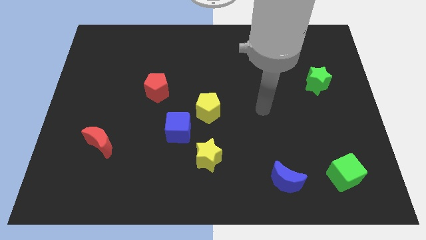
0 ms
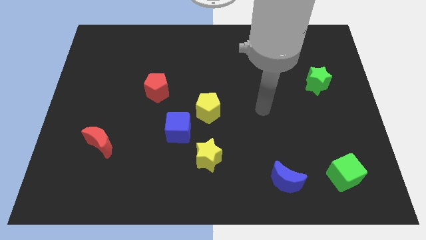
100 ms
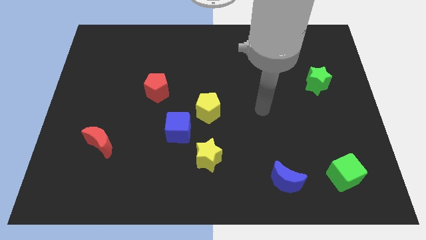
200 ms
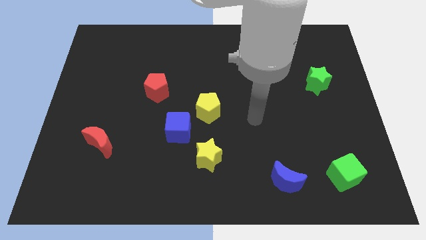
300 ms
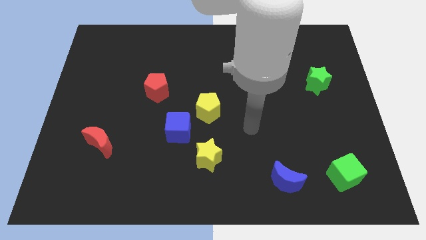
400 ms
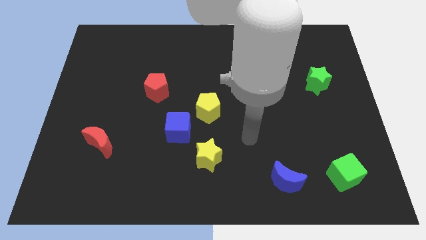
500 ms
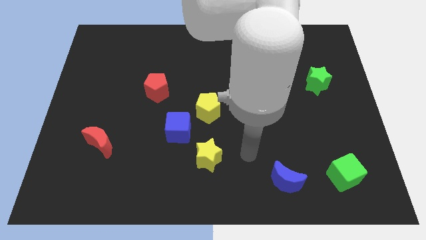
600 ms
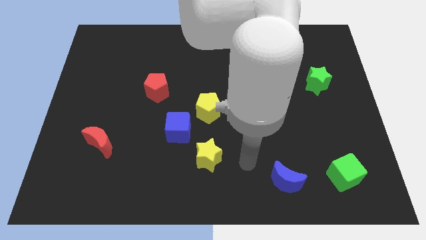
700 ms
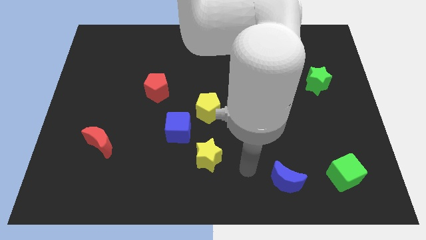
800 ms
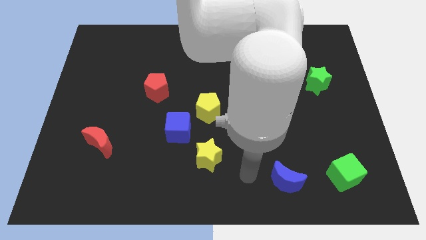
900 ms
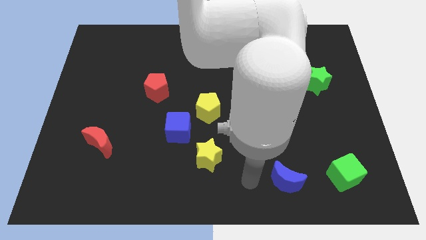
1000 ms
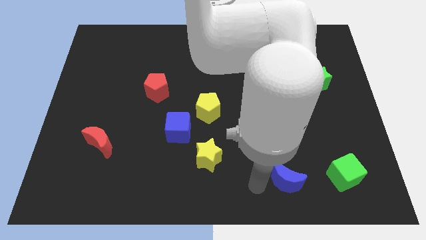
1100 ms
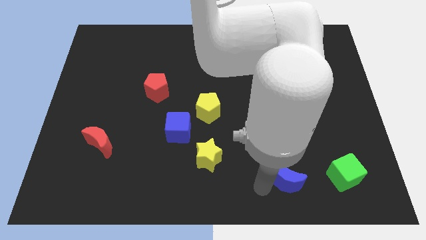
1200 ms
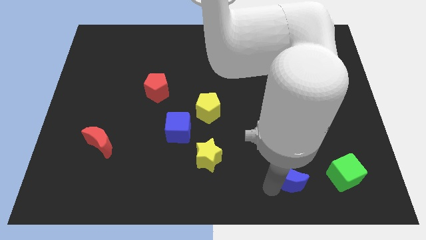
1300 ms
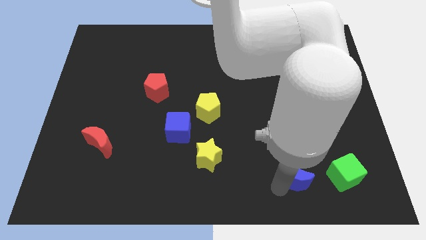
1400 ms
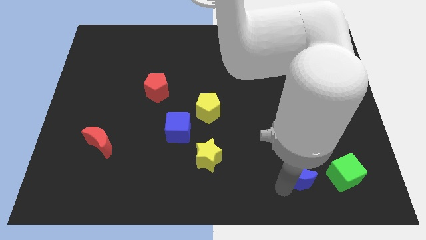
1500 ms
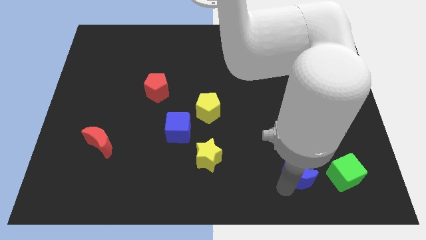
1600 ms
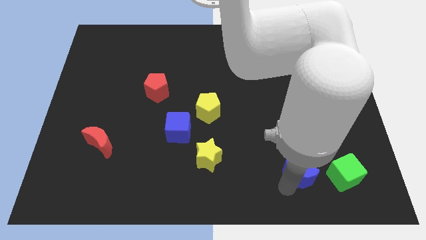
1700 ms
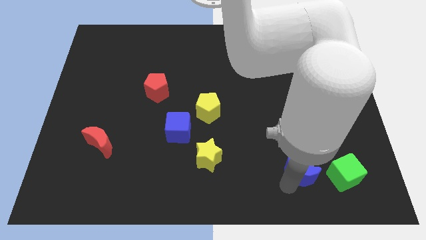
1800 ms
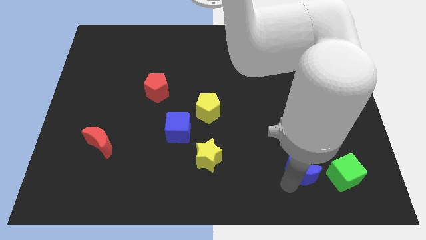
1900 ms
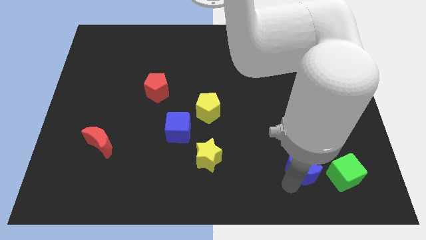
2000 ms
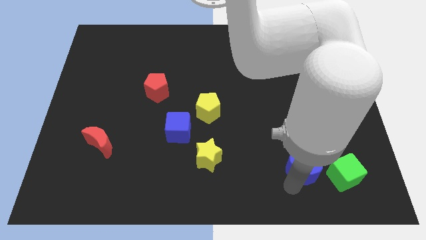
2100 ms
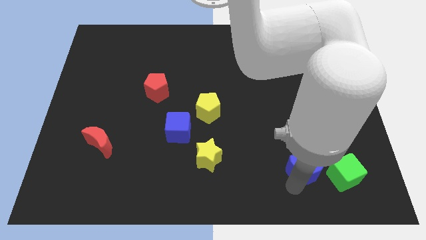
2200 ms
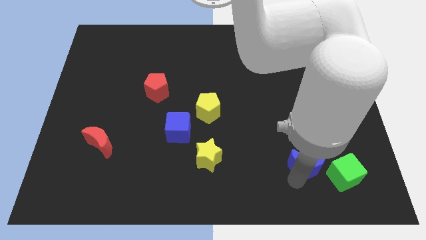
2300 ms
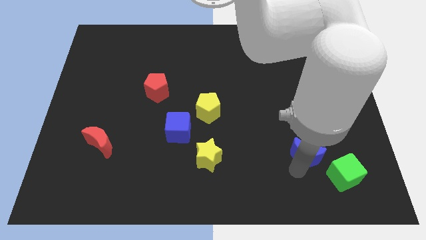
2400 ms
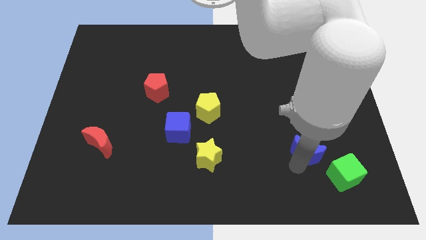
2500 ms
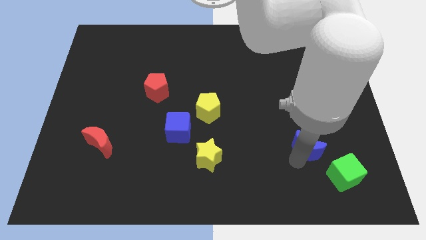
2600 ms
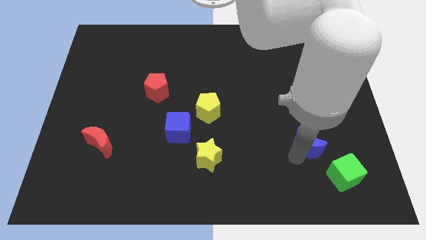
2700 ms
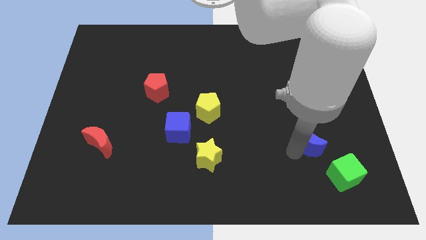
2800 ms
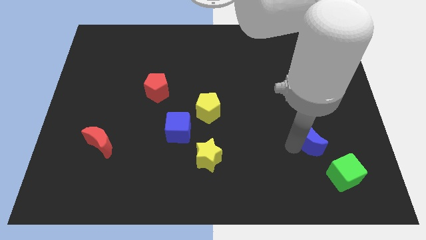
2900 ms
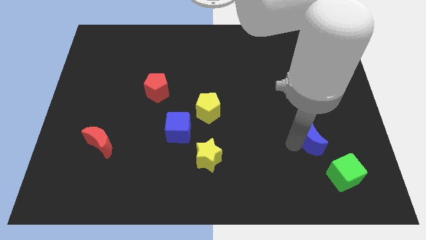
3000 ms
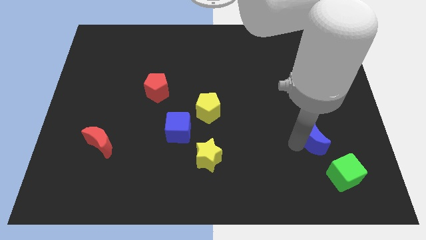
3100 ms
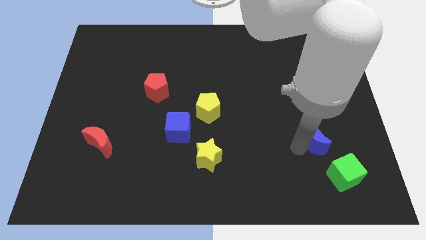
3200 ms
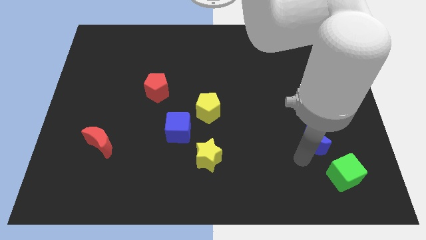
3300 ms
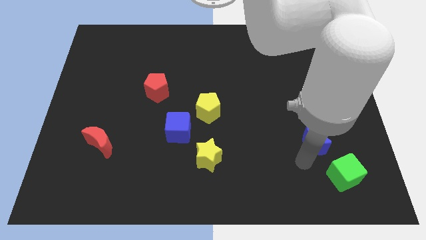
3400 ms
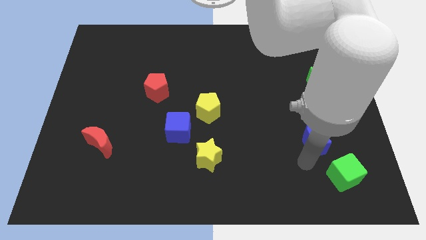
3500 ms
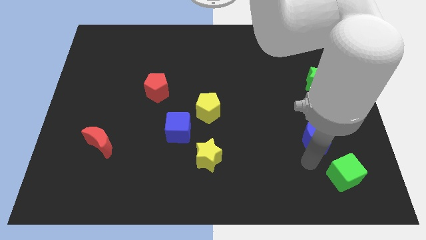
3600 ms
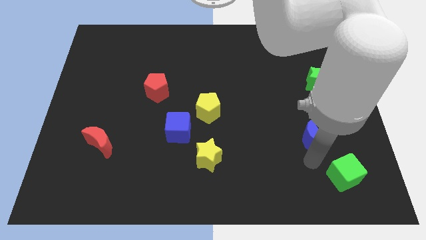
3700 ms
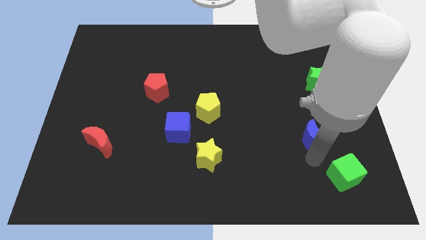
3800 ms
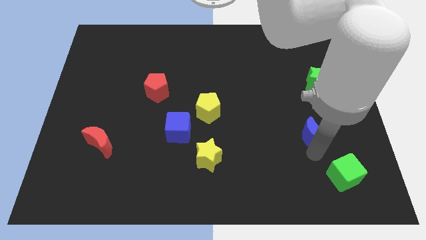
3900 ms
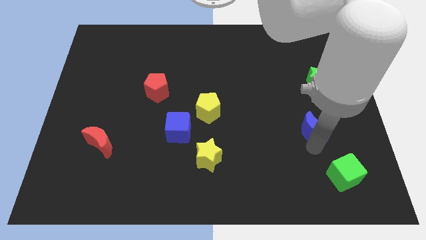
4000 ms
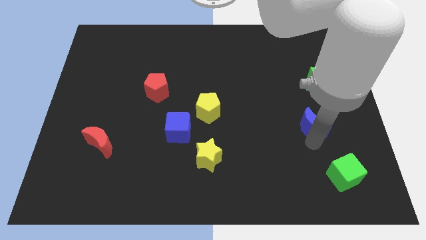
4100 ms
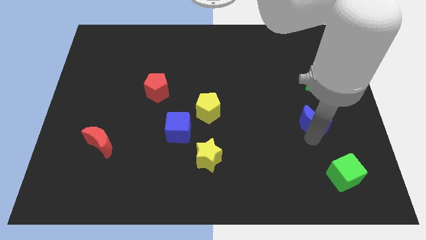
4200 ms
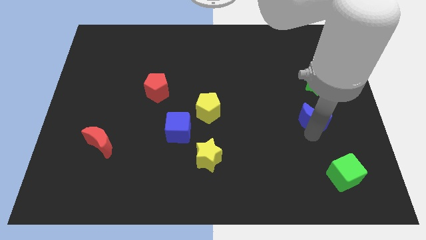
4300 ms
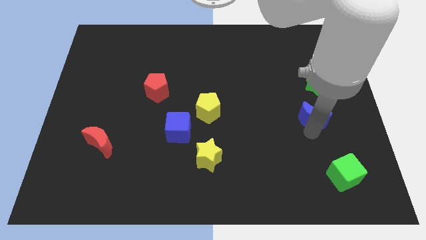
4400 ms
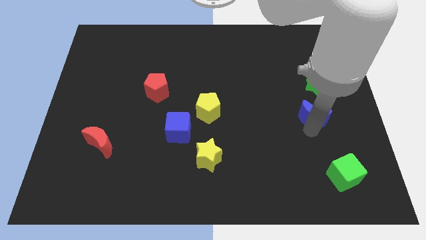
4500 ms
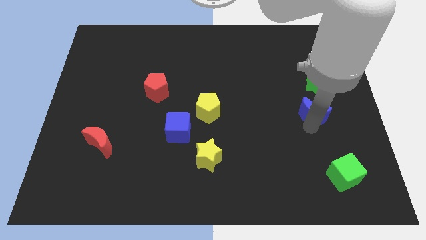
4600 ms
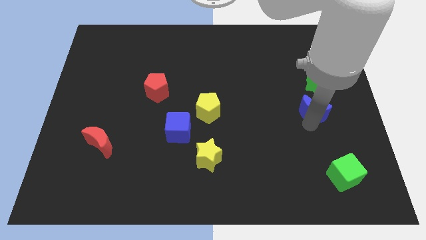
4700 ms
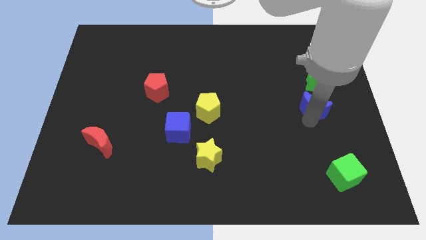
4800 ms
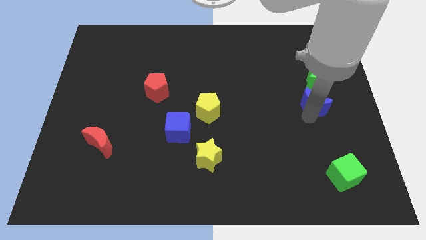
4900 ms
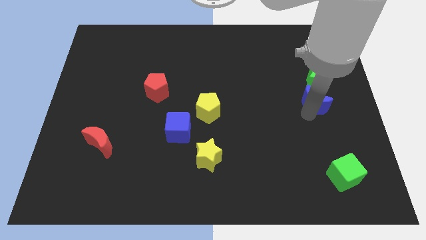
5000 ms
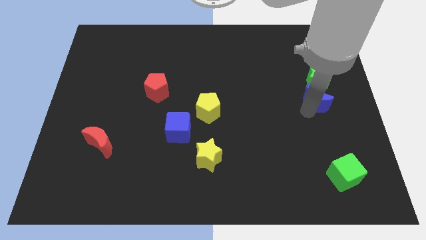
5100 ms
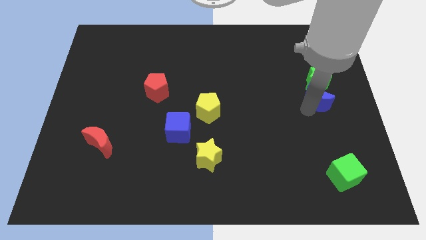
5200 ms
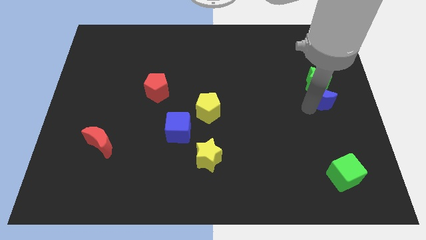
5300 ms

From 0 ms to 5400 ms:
move the blue moon close to the green star

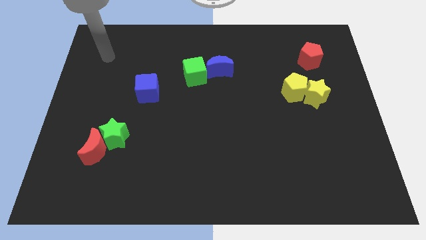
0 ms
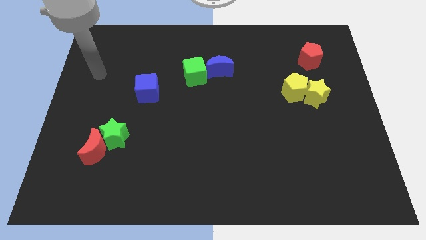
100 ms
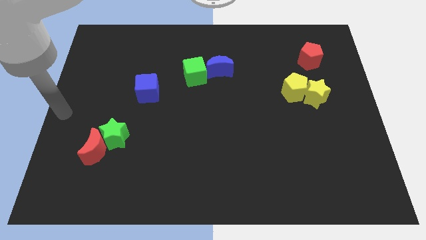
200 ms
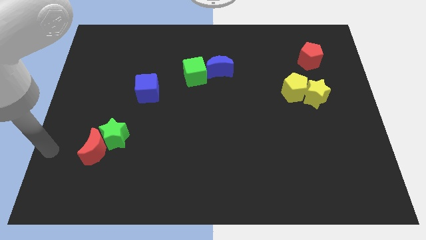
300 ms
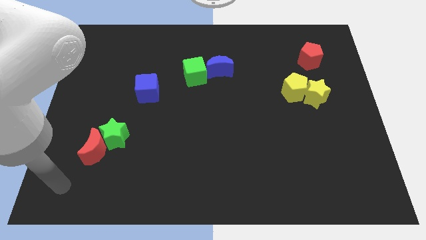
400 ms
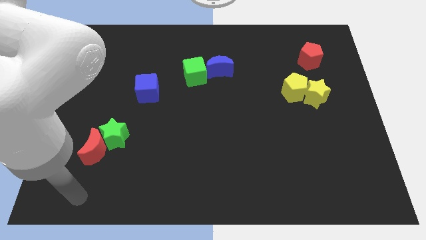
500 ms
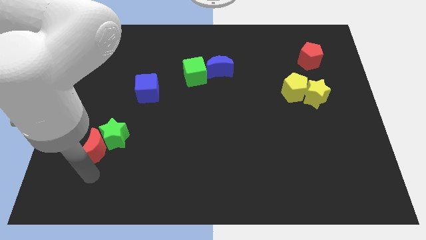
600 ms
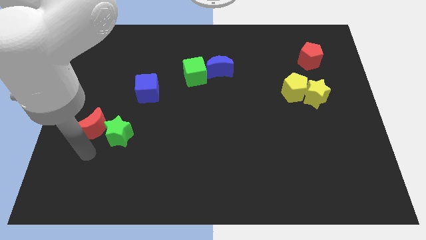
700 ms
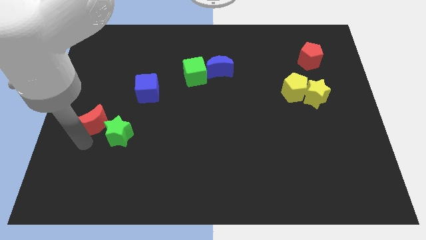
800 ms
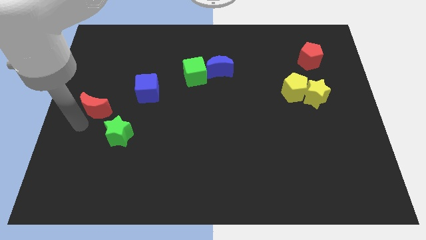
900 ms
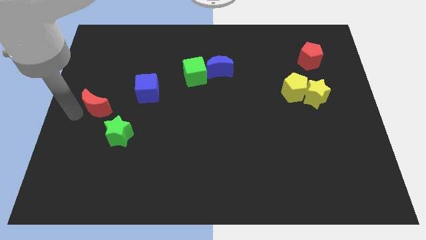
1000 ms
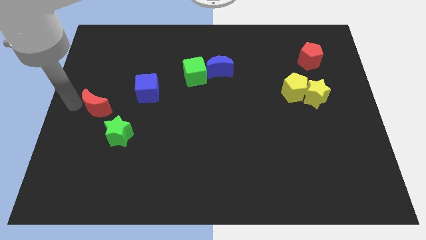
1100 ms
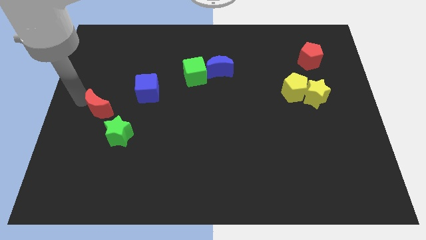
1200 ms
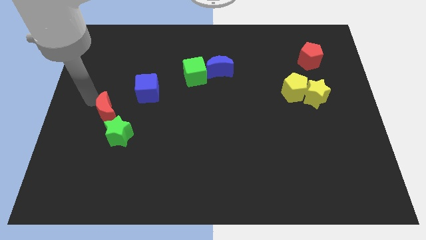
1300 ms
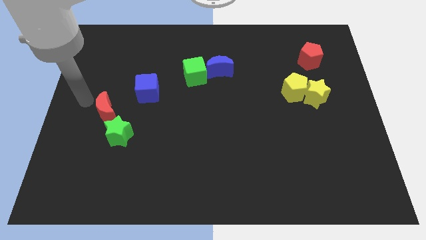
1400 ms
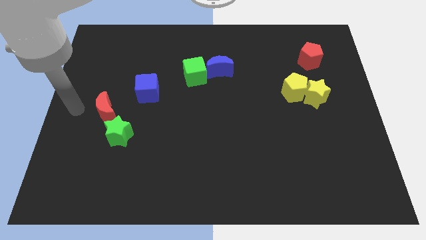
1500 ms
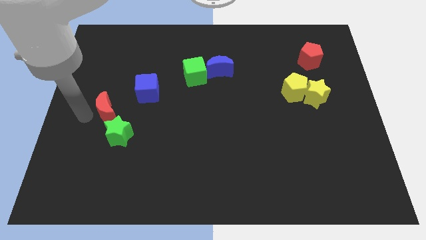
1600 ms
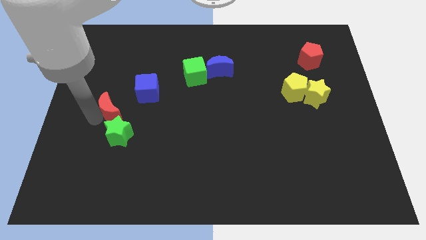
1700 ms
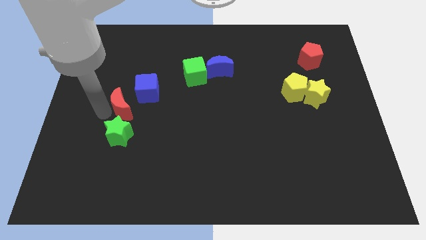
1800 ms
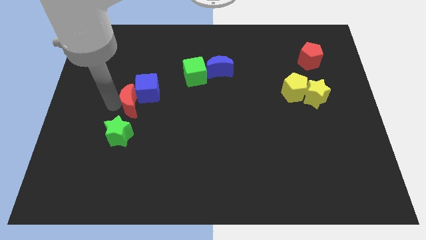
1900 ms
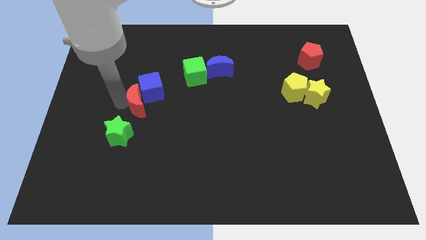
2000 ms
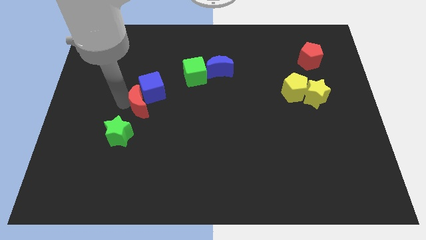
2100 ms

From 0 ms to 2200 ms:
put the red moon towards the blue cube

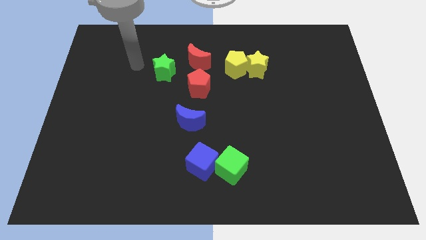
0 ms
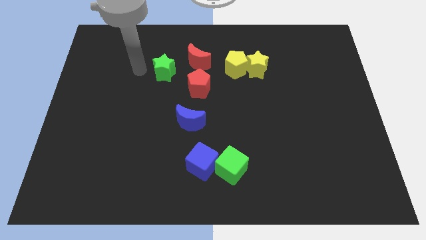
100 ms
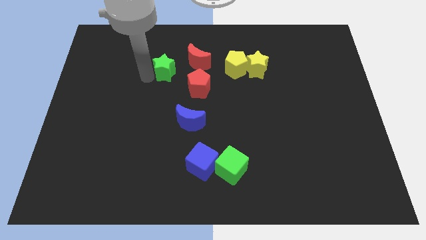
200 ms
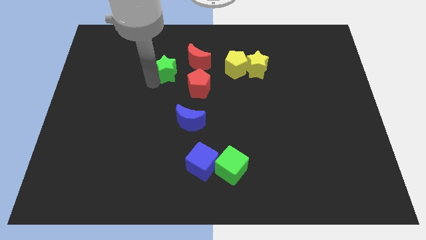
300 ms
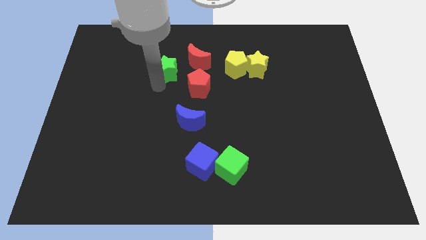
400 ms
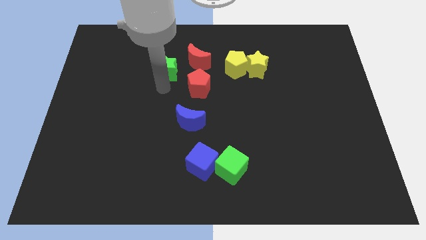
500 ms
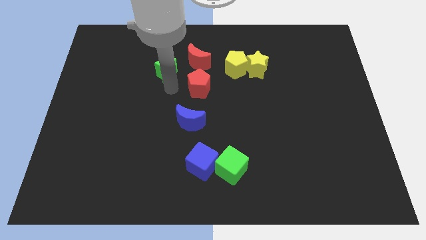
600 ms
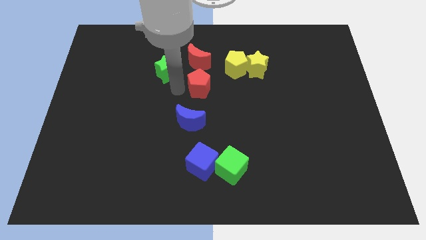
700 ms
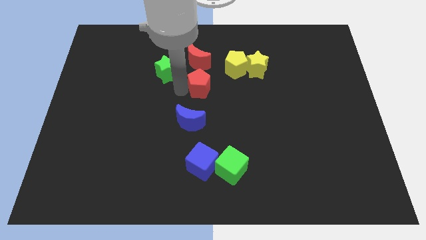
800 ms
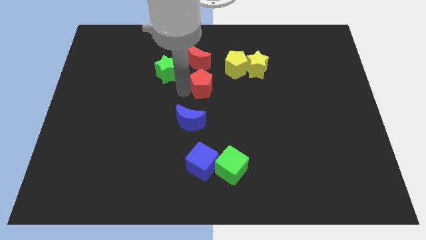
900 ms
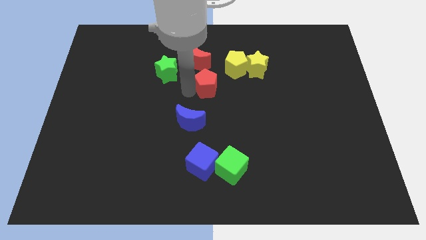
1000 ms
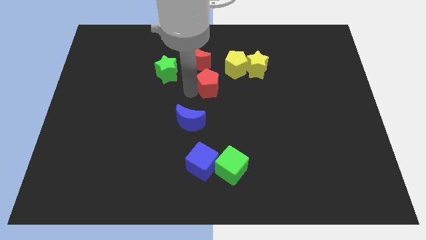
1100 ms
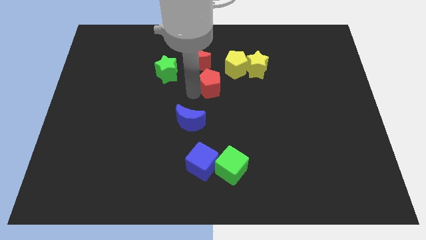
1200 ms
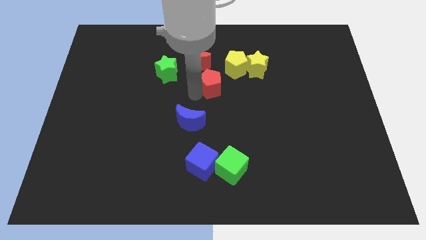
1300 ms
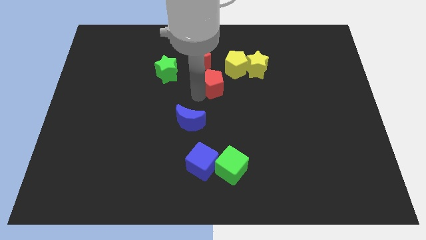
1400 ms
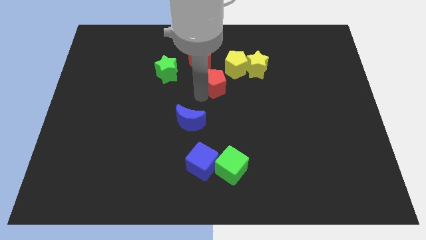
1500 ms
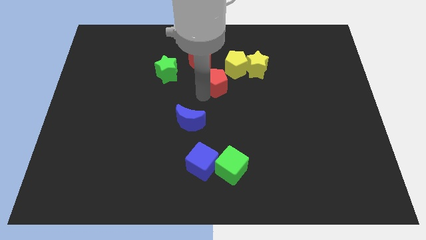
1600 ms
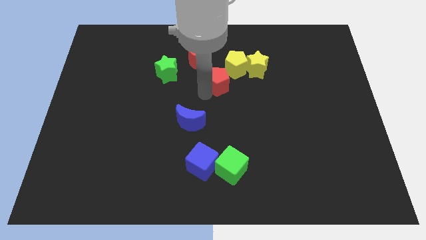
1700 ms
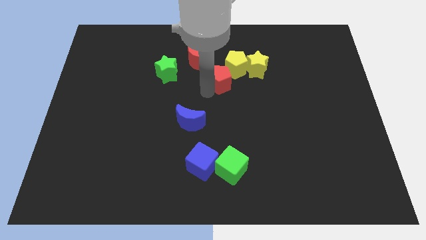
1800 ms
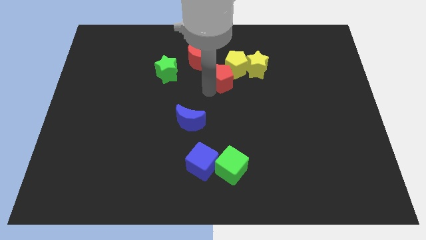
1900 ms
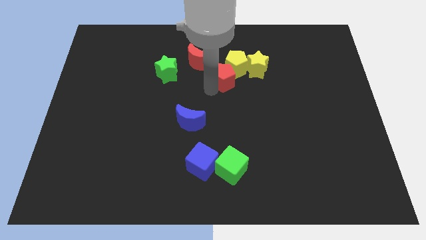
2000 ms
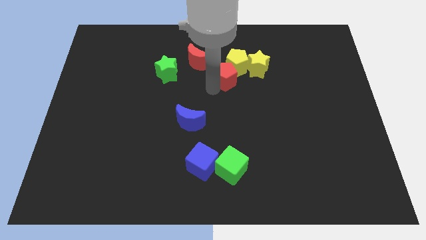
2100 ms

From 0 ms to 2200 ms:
slide the red pentagon towards the yellow pentagon
